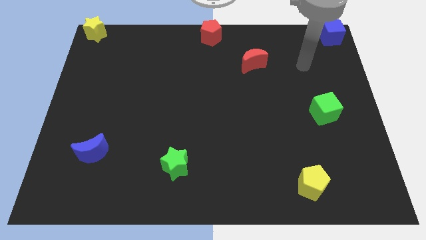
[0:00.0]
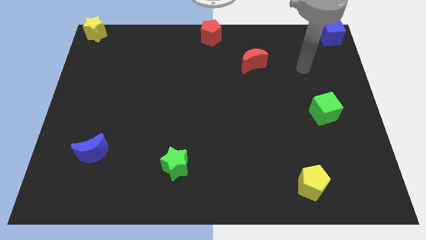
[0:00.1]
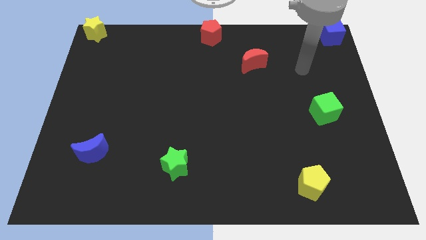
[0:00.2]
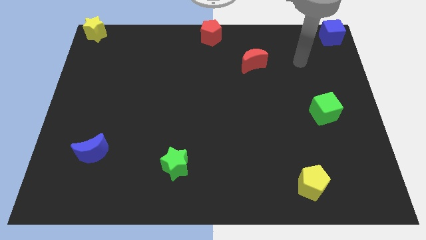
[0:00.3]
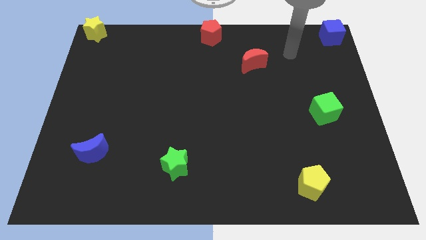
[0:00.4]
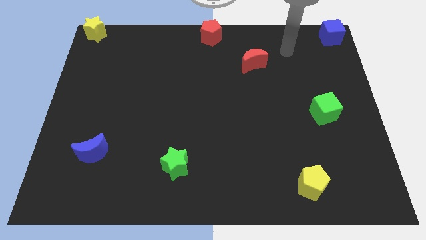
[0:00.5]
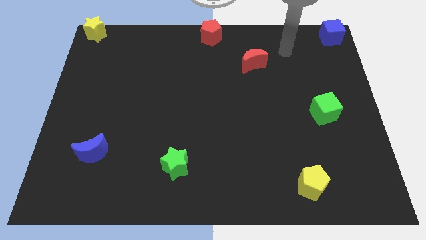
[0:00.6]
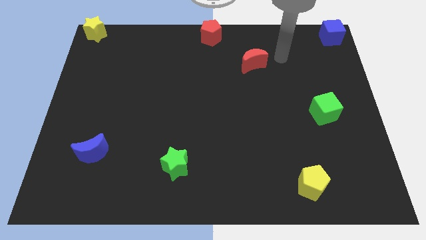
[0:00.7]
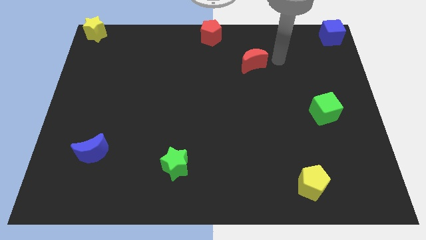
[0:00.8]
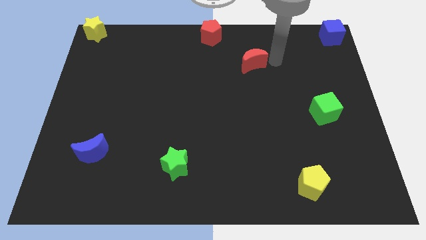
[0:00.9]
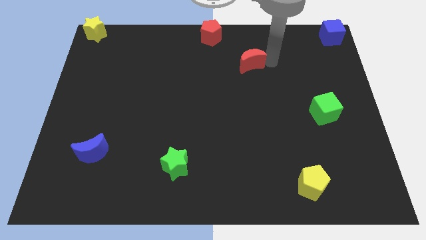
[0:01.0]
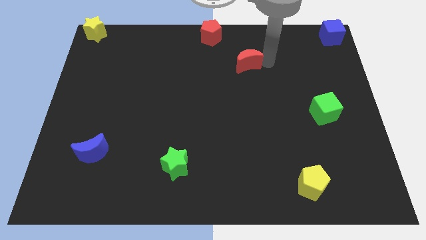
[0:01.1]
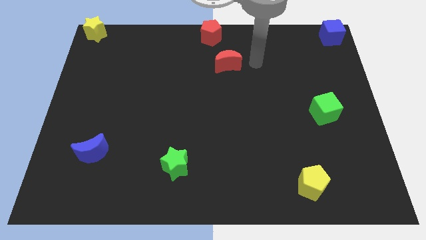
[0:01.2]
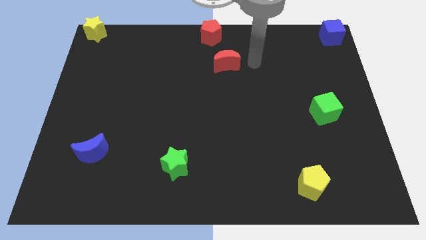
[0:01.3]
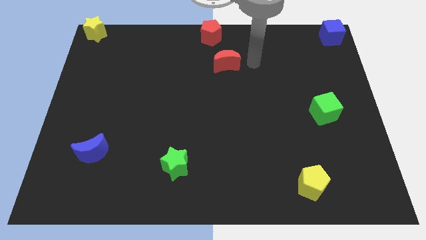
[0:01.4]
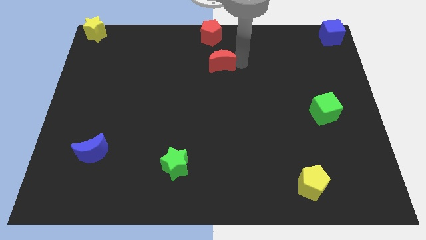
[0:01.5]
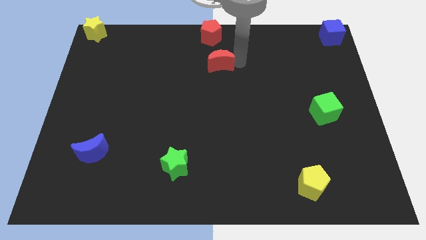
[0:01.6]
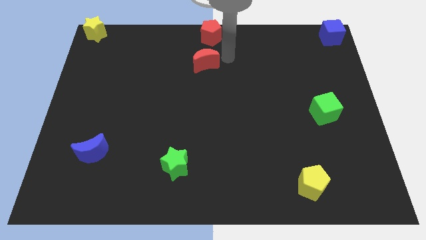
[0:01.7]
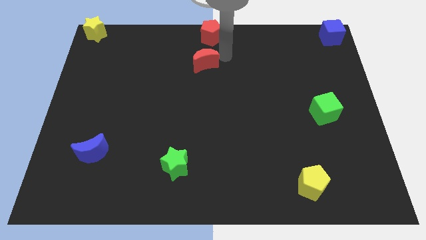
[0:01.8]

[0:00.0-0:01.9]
push the red moon vertical to red pentagon

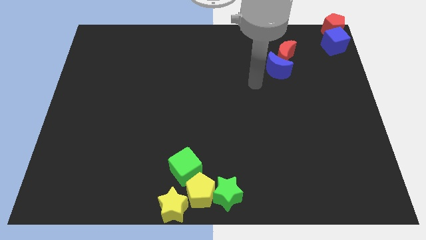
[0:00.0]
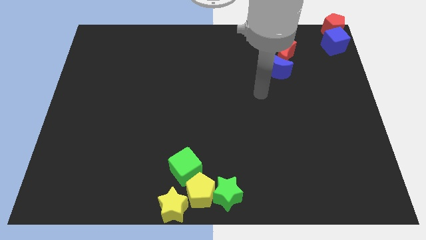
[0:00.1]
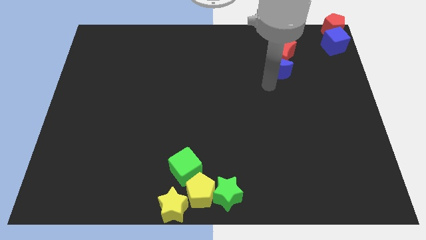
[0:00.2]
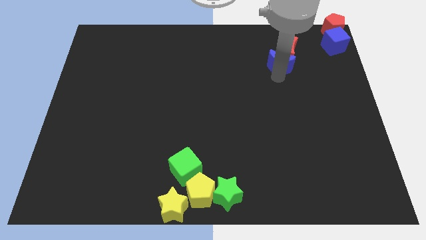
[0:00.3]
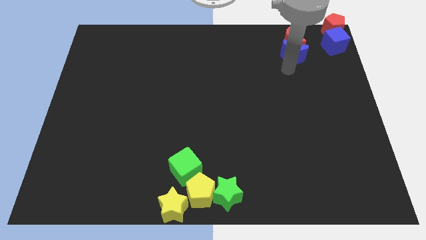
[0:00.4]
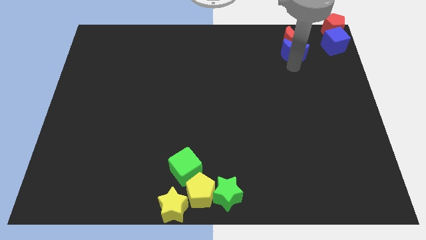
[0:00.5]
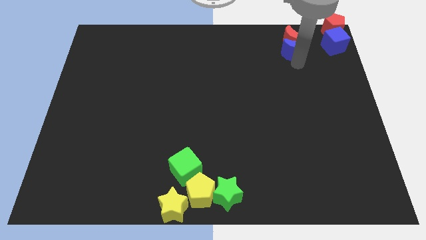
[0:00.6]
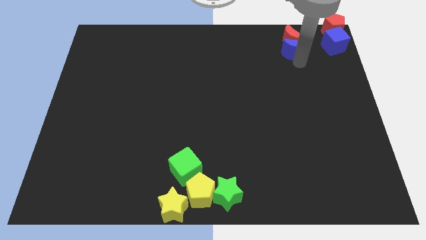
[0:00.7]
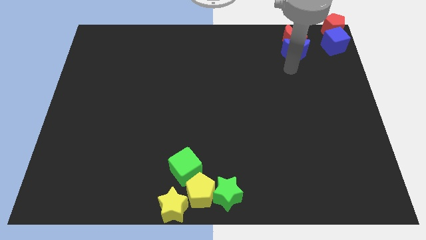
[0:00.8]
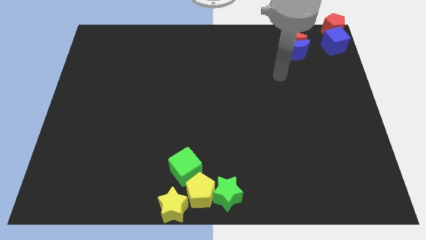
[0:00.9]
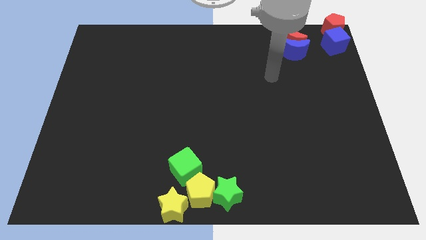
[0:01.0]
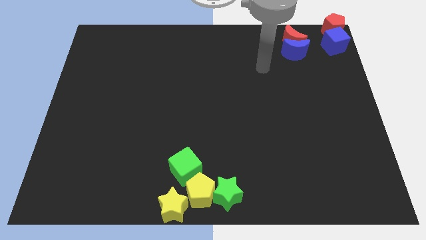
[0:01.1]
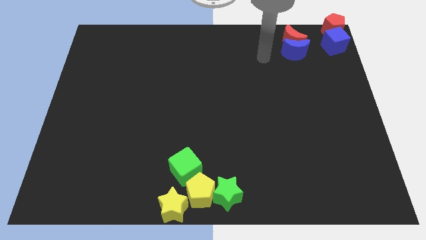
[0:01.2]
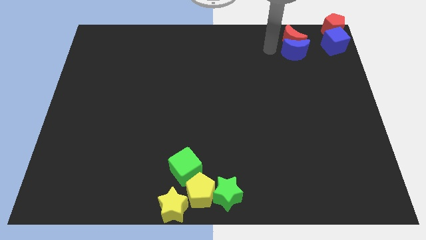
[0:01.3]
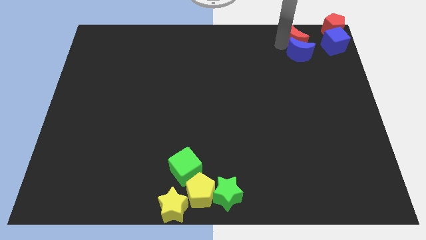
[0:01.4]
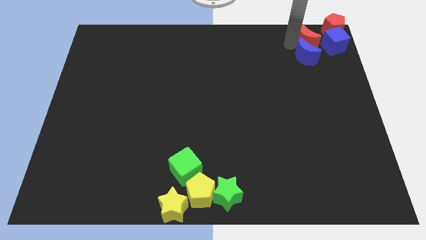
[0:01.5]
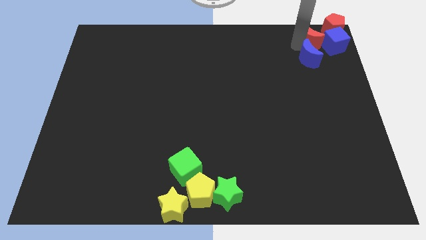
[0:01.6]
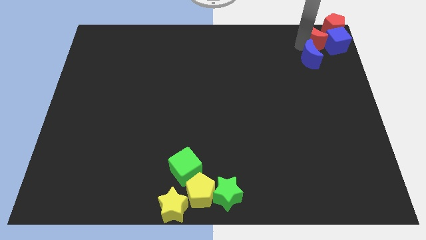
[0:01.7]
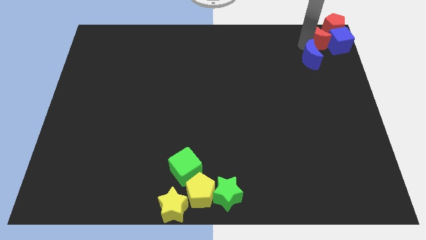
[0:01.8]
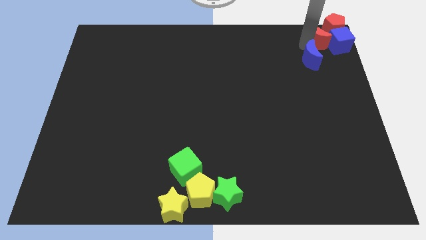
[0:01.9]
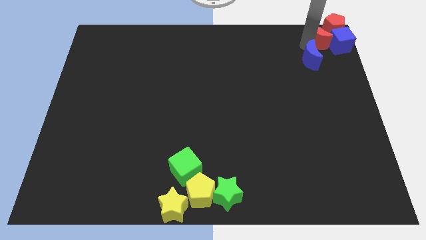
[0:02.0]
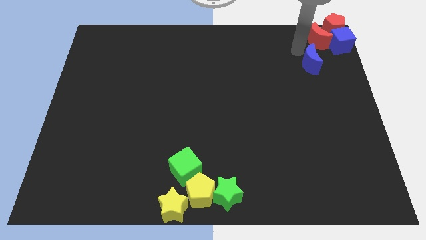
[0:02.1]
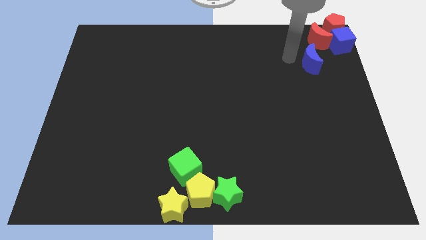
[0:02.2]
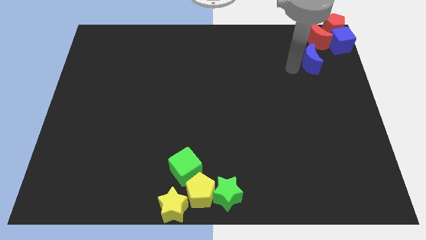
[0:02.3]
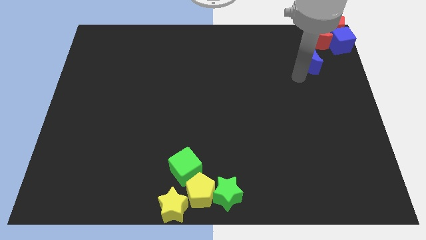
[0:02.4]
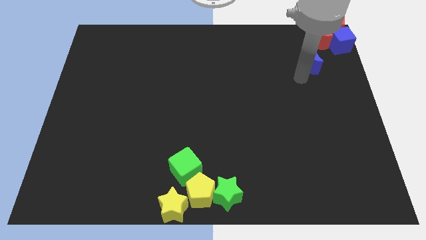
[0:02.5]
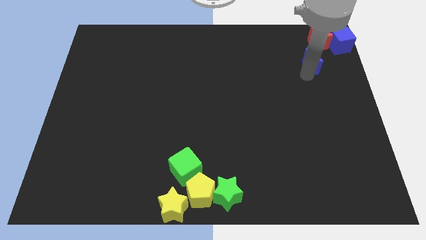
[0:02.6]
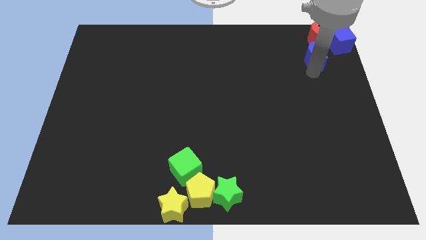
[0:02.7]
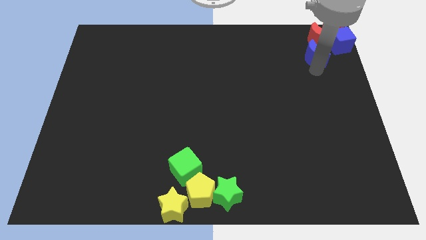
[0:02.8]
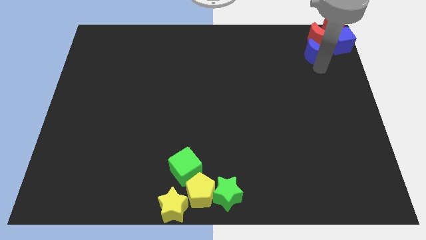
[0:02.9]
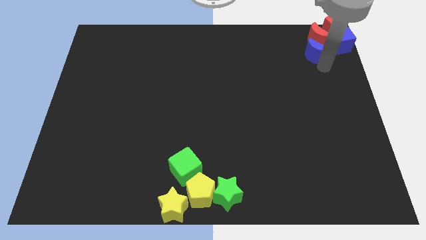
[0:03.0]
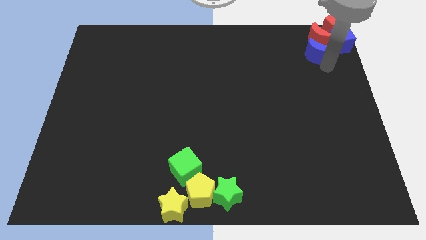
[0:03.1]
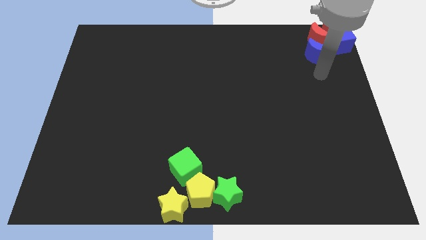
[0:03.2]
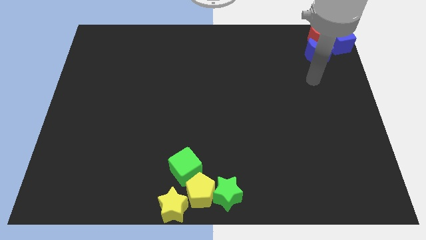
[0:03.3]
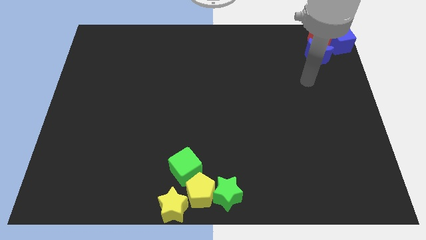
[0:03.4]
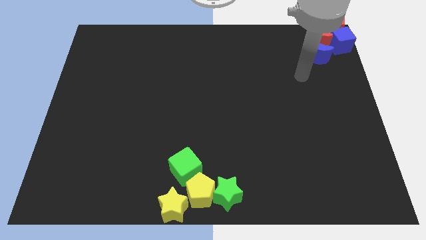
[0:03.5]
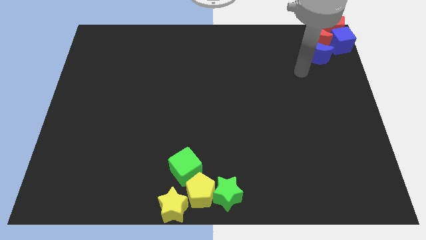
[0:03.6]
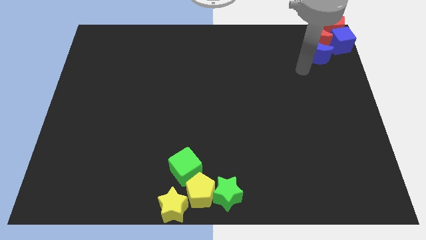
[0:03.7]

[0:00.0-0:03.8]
place the blue moon below the red moon

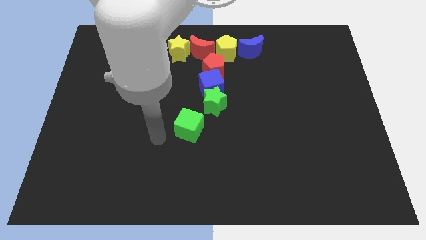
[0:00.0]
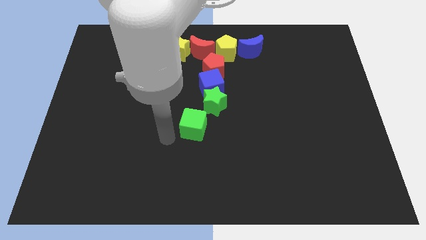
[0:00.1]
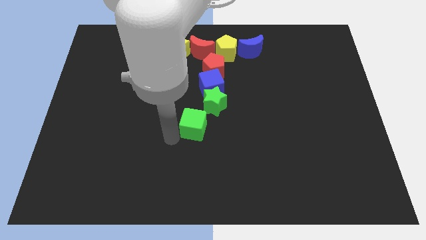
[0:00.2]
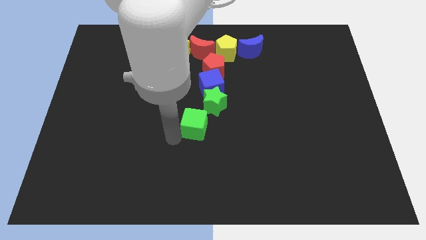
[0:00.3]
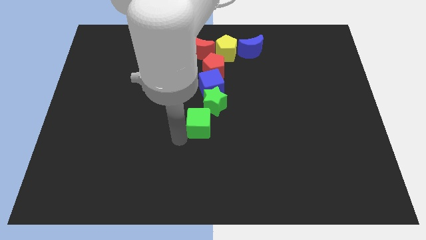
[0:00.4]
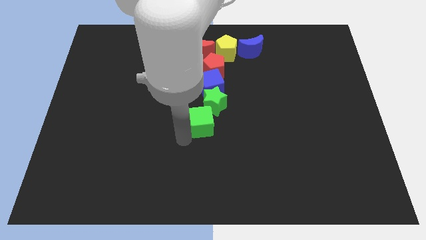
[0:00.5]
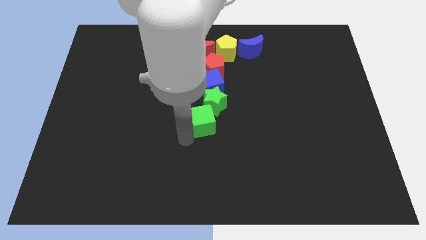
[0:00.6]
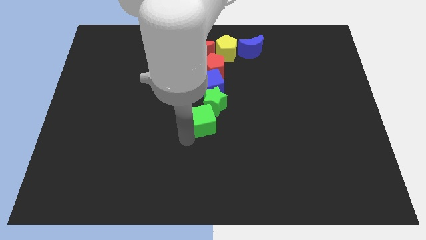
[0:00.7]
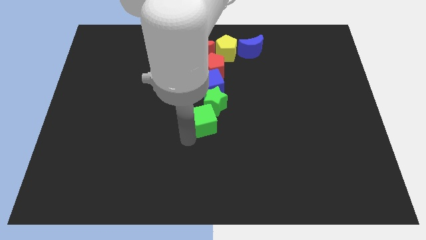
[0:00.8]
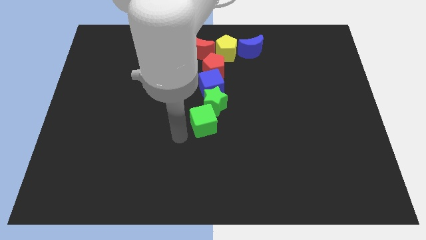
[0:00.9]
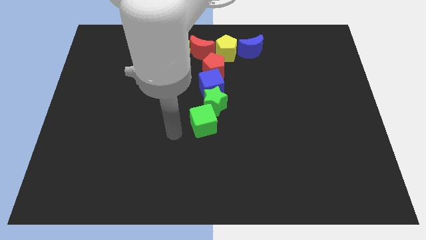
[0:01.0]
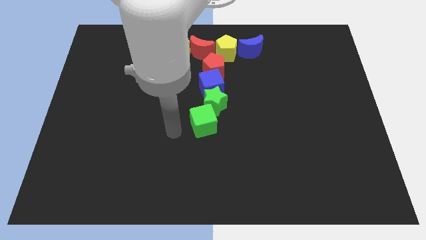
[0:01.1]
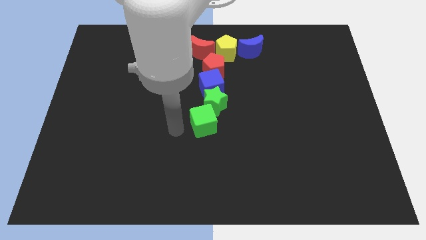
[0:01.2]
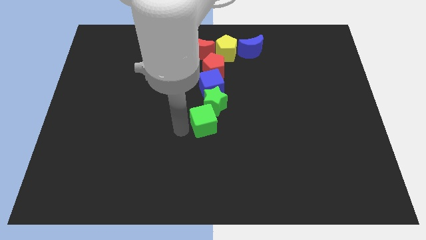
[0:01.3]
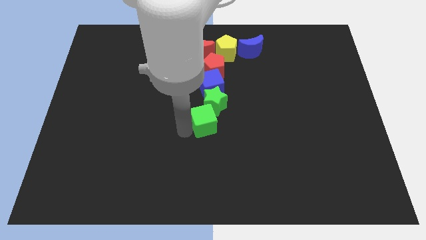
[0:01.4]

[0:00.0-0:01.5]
move green cube below left to green star

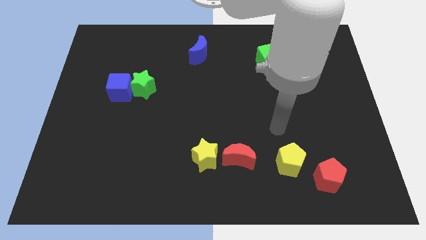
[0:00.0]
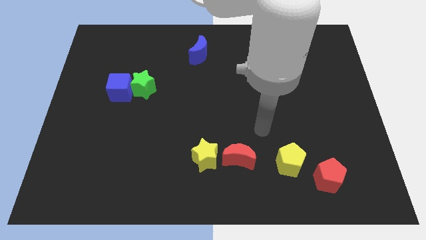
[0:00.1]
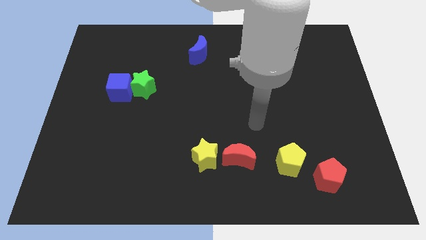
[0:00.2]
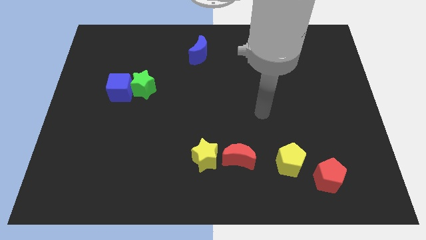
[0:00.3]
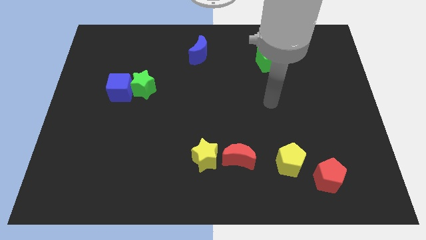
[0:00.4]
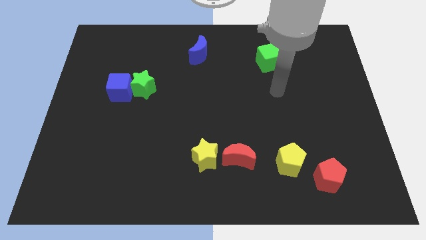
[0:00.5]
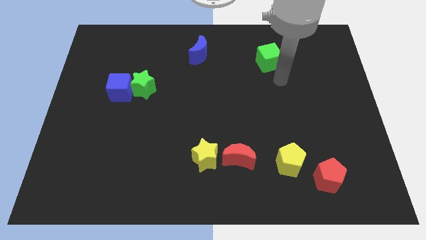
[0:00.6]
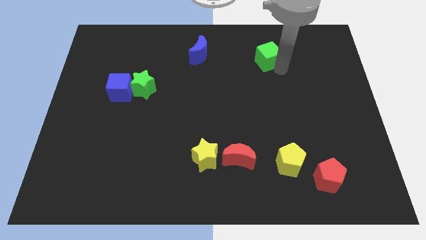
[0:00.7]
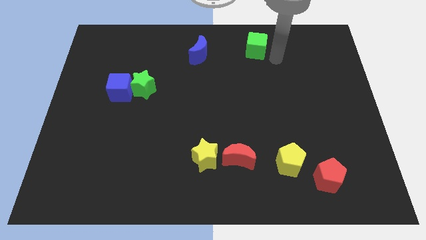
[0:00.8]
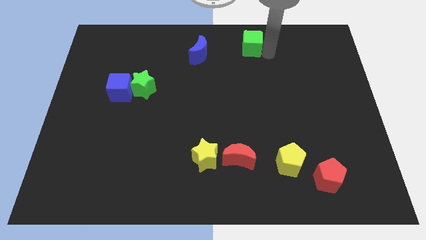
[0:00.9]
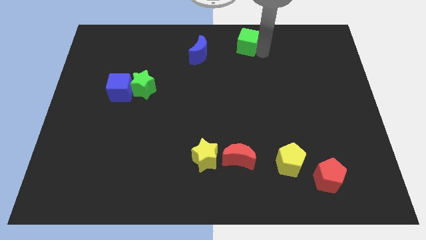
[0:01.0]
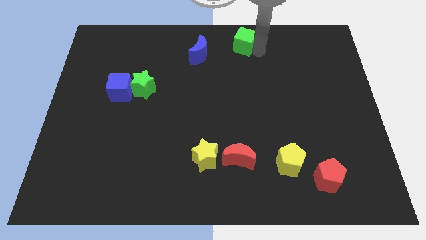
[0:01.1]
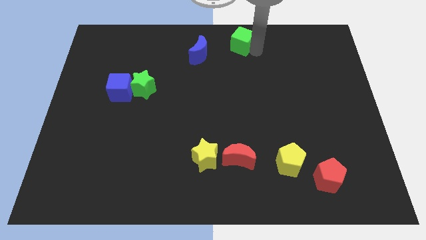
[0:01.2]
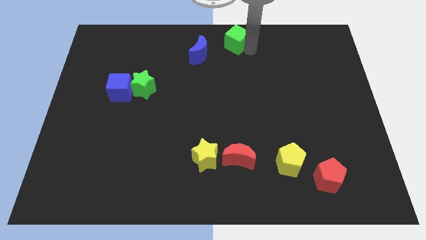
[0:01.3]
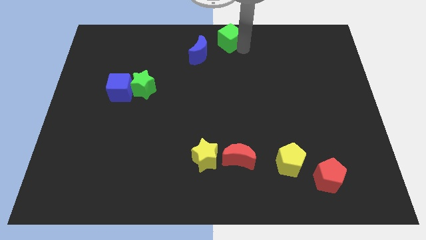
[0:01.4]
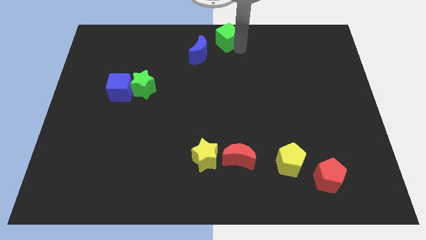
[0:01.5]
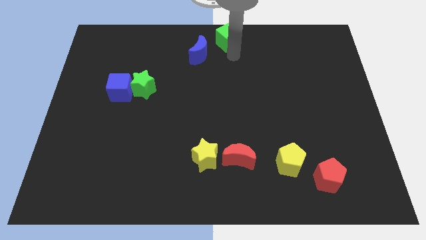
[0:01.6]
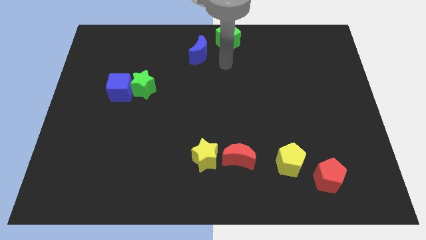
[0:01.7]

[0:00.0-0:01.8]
place the green cube at the top center of the board
